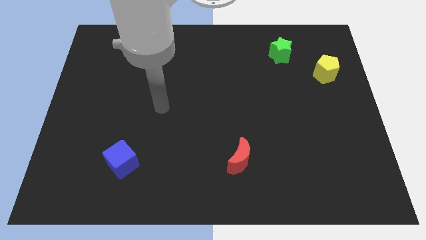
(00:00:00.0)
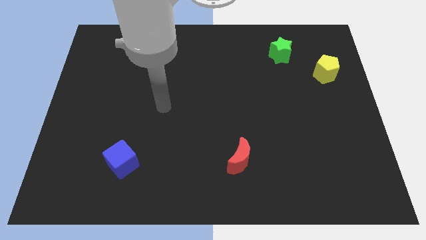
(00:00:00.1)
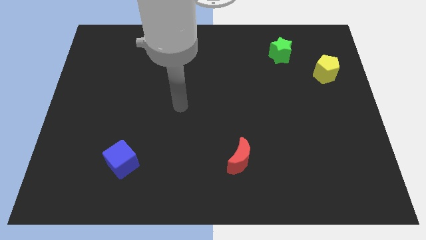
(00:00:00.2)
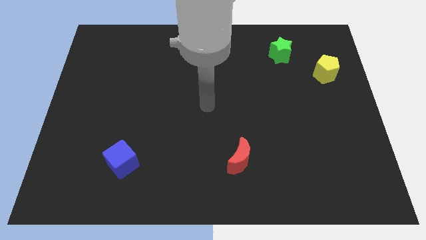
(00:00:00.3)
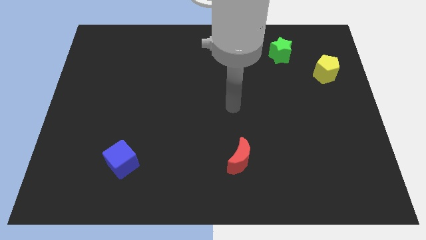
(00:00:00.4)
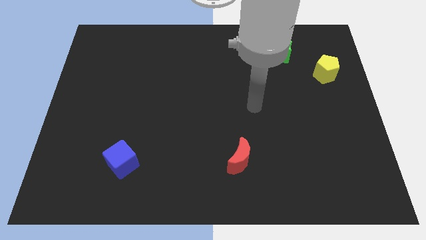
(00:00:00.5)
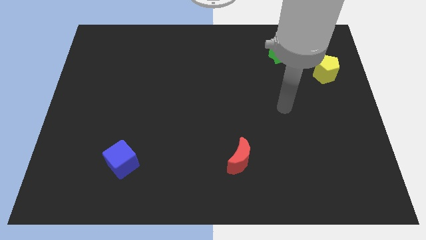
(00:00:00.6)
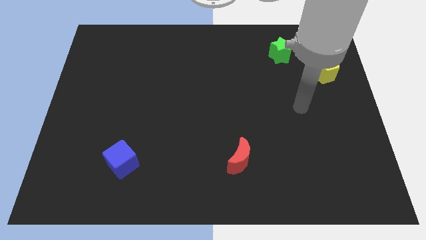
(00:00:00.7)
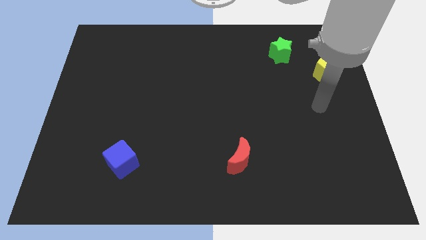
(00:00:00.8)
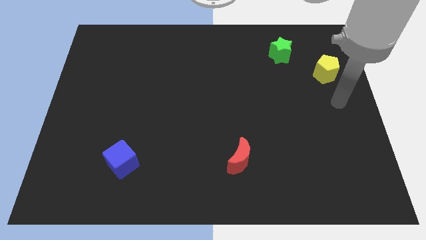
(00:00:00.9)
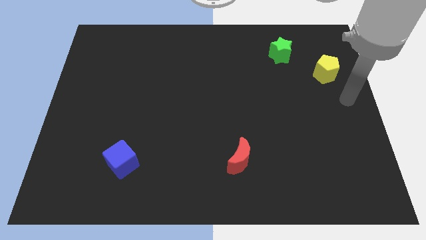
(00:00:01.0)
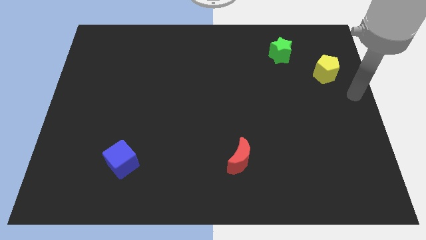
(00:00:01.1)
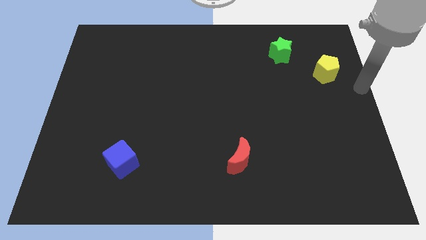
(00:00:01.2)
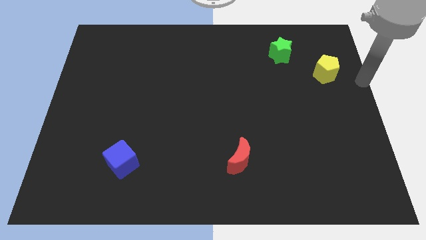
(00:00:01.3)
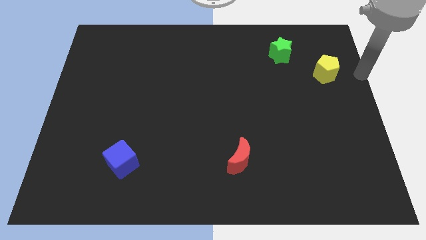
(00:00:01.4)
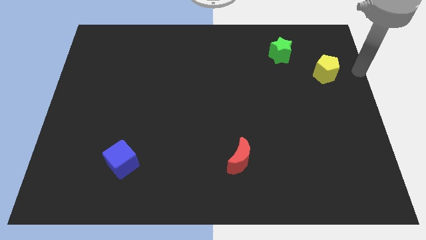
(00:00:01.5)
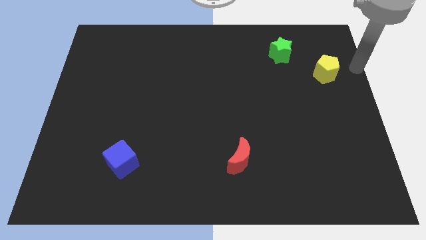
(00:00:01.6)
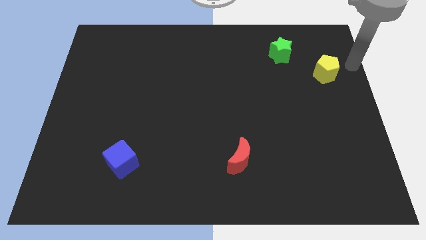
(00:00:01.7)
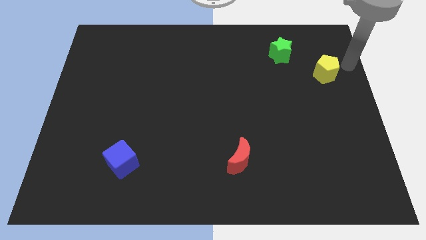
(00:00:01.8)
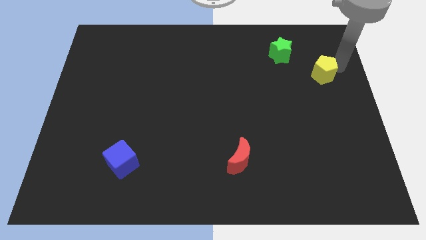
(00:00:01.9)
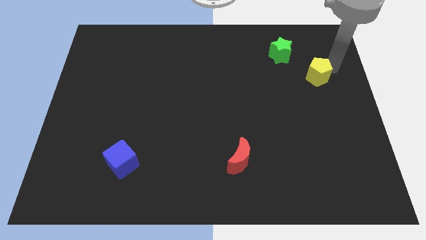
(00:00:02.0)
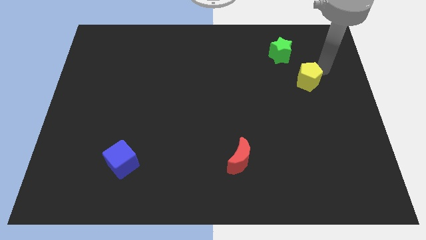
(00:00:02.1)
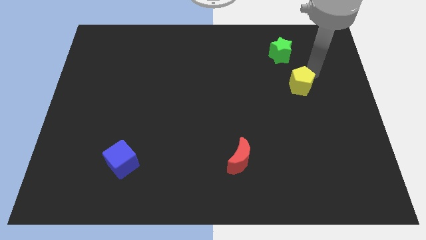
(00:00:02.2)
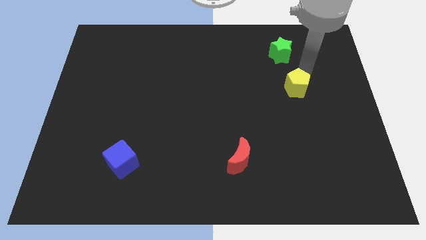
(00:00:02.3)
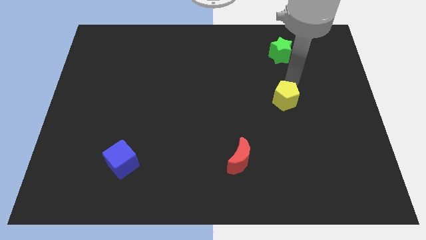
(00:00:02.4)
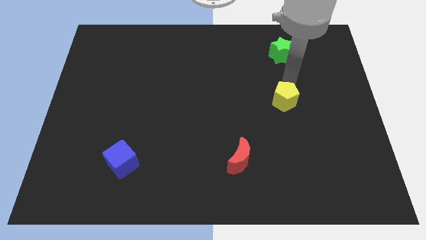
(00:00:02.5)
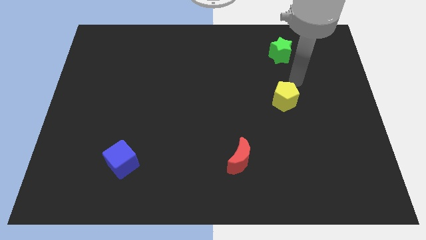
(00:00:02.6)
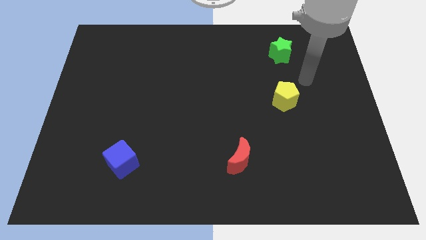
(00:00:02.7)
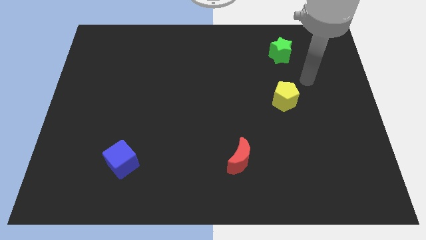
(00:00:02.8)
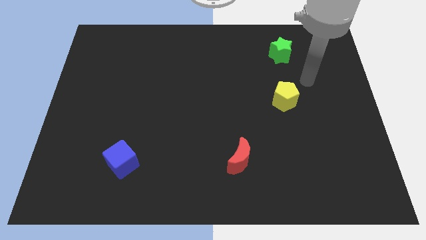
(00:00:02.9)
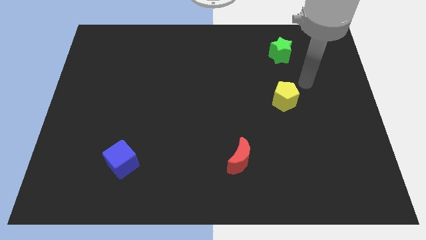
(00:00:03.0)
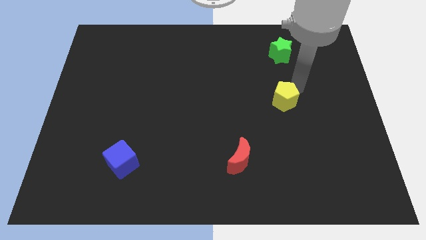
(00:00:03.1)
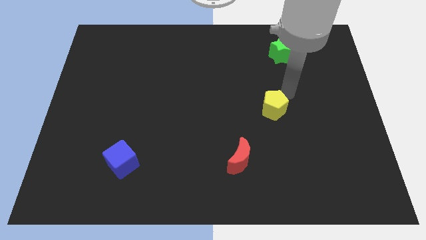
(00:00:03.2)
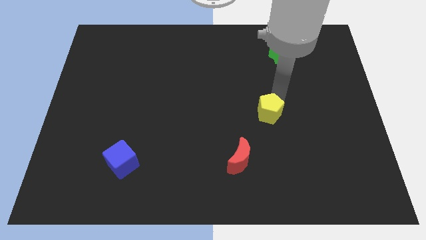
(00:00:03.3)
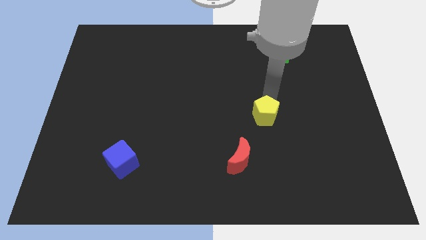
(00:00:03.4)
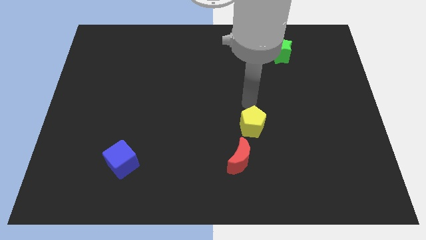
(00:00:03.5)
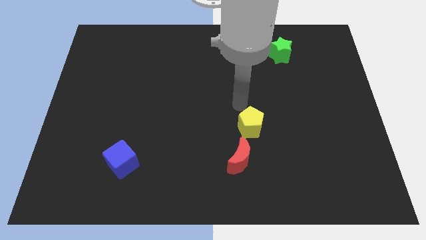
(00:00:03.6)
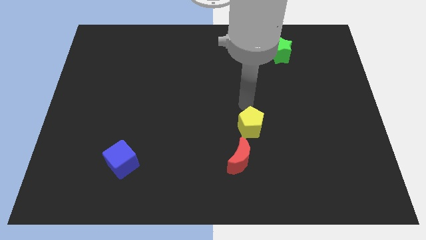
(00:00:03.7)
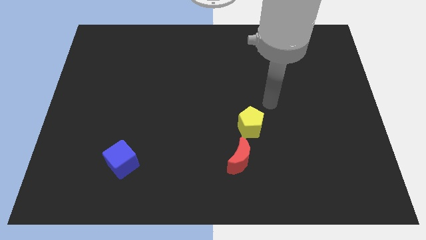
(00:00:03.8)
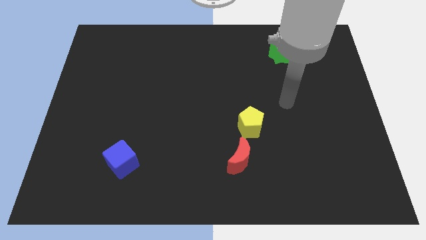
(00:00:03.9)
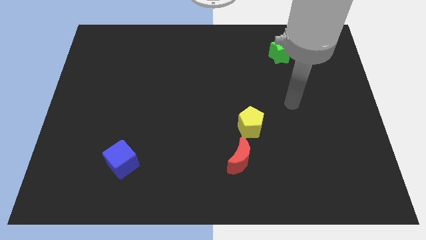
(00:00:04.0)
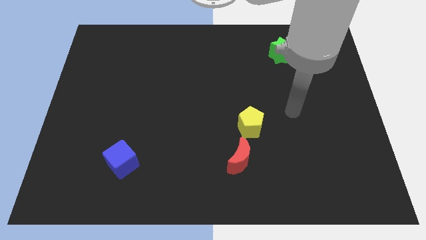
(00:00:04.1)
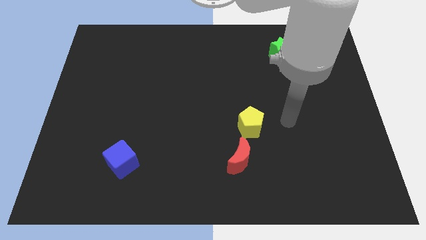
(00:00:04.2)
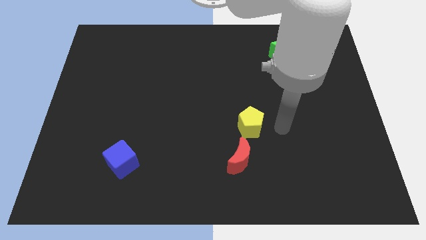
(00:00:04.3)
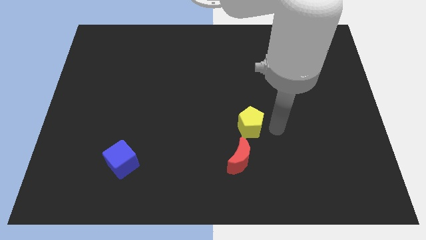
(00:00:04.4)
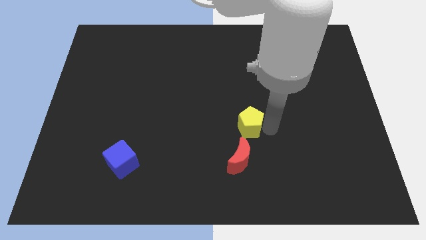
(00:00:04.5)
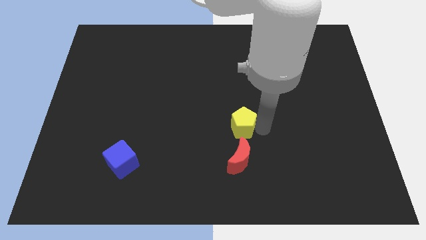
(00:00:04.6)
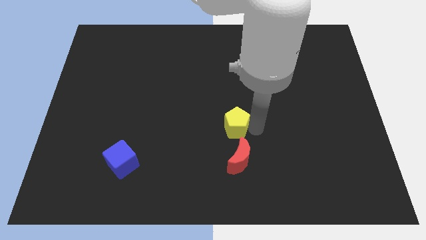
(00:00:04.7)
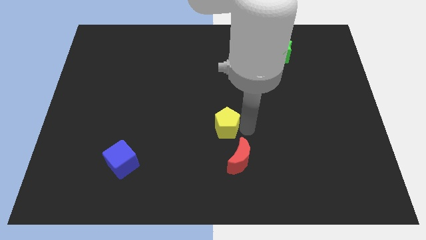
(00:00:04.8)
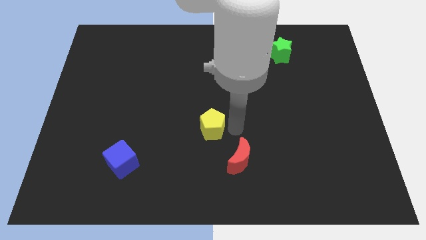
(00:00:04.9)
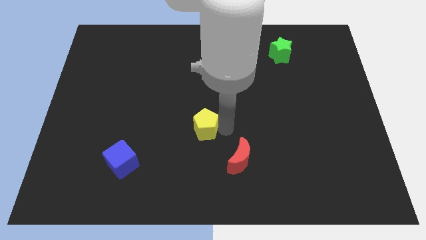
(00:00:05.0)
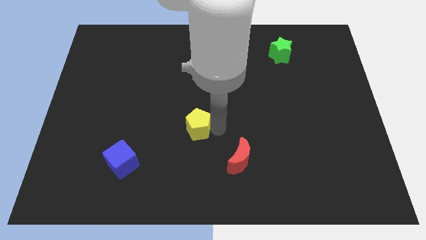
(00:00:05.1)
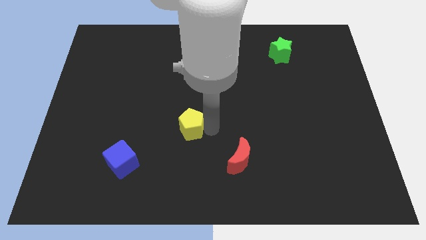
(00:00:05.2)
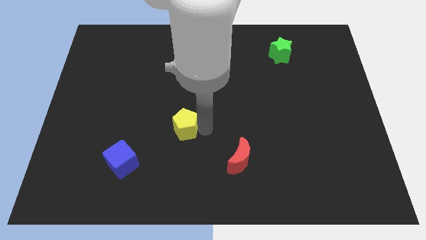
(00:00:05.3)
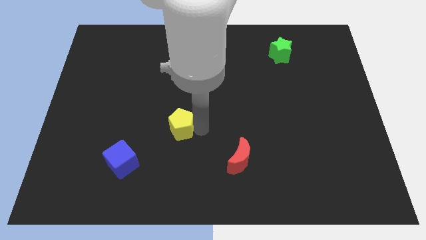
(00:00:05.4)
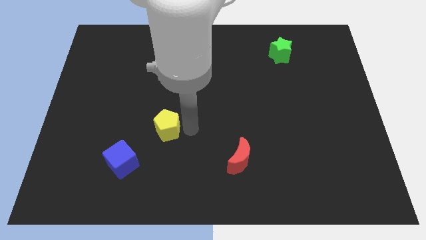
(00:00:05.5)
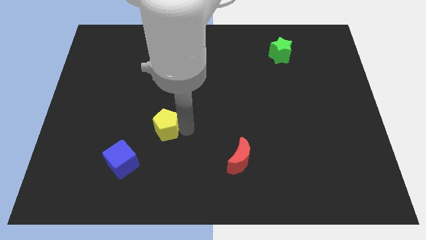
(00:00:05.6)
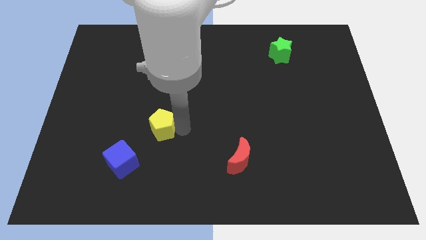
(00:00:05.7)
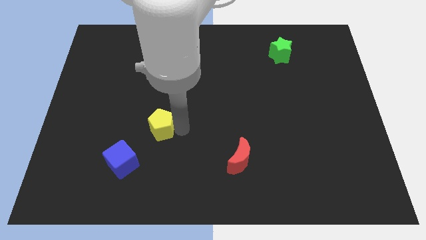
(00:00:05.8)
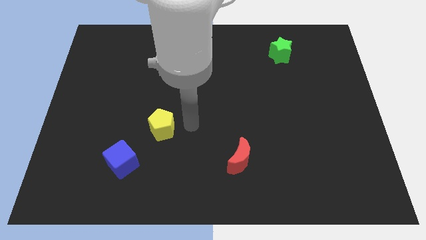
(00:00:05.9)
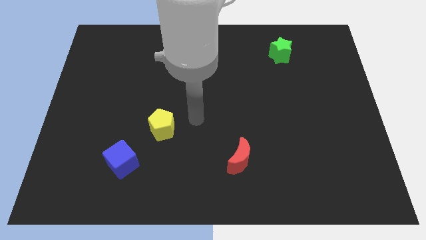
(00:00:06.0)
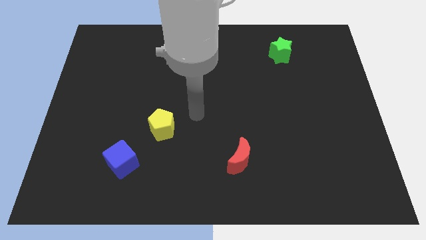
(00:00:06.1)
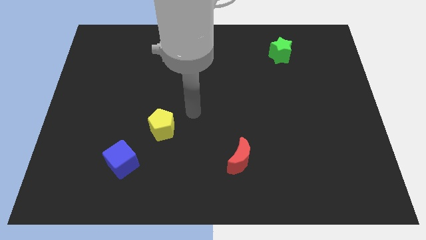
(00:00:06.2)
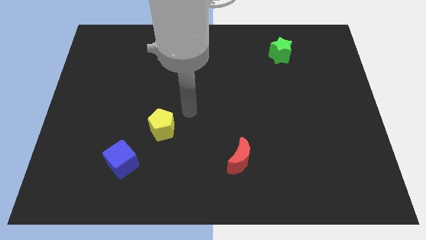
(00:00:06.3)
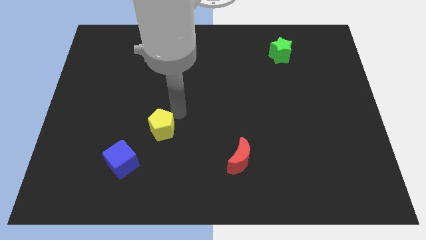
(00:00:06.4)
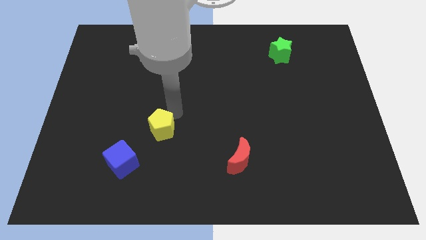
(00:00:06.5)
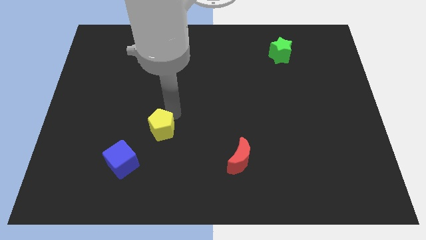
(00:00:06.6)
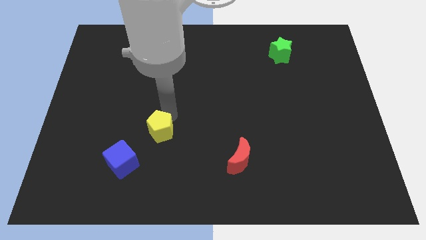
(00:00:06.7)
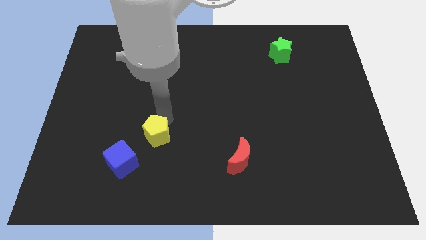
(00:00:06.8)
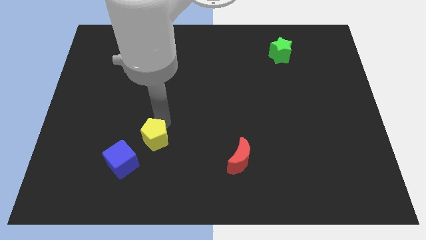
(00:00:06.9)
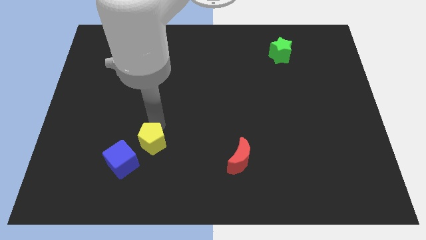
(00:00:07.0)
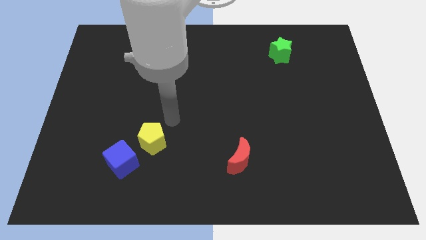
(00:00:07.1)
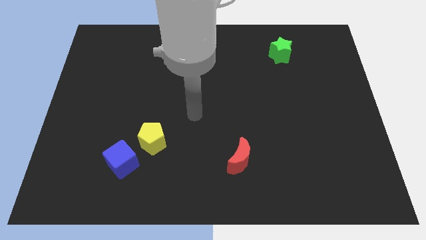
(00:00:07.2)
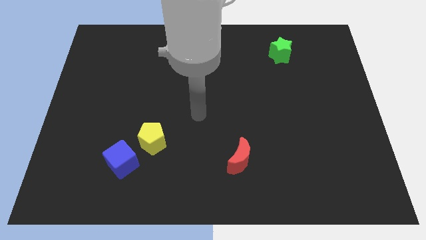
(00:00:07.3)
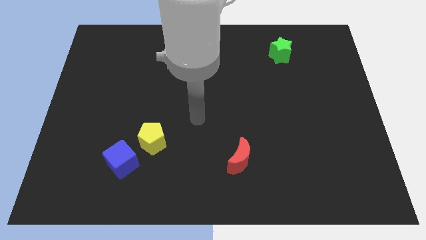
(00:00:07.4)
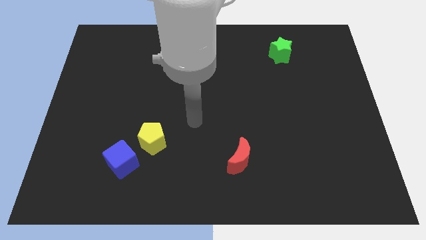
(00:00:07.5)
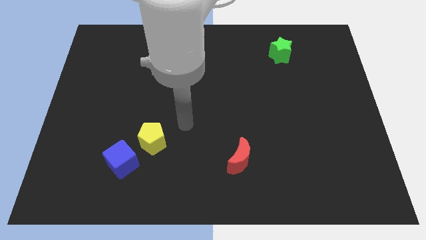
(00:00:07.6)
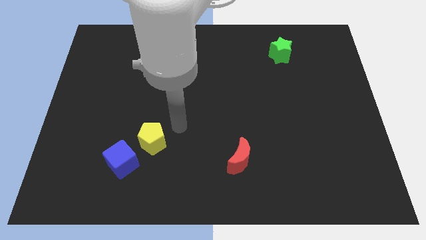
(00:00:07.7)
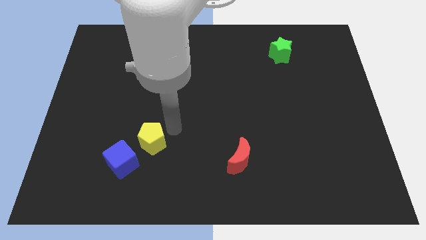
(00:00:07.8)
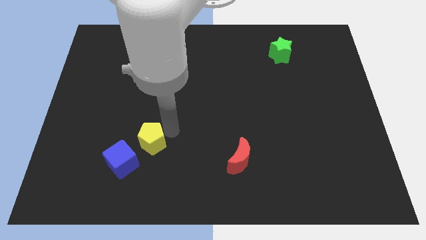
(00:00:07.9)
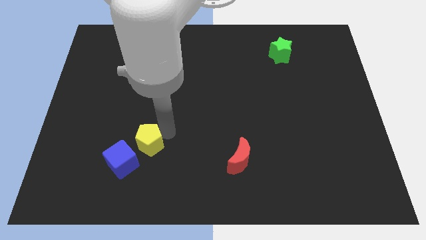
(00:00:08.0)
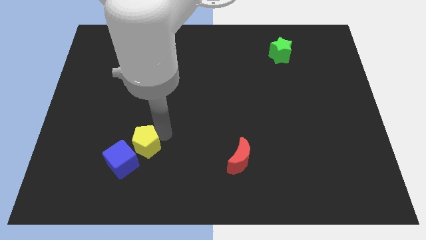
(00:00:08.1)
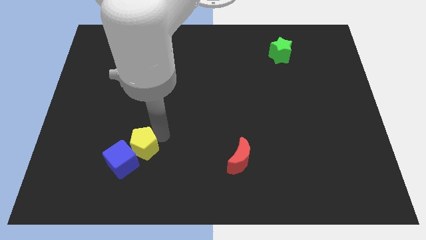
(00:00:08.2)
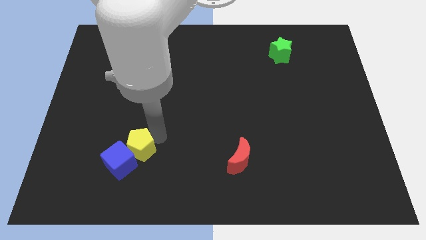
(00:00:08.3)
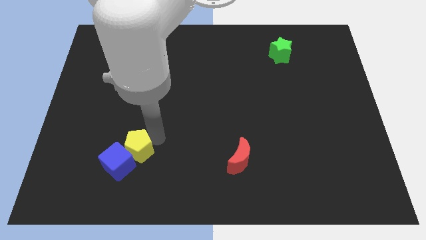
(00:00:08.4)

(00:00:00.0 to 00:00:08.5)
slide the yellow block close to the blue cube

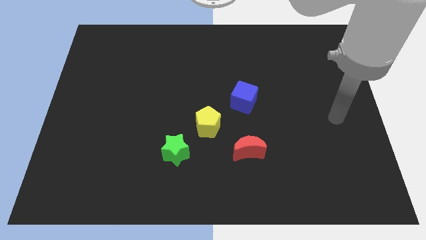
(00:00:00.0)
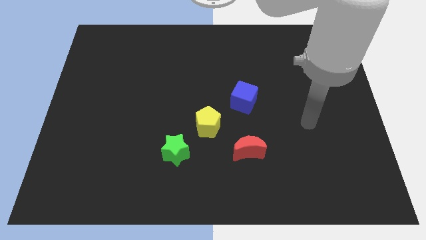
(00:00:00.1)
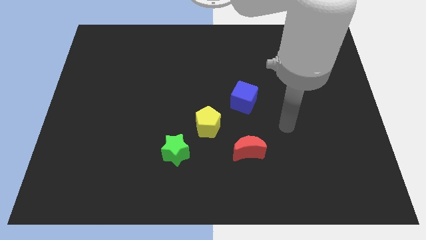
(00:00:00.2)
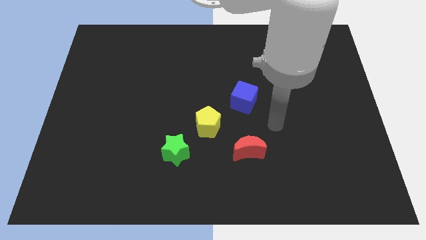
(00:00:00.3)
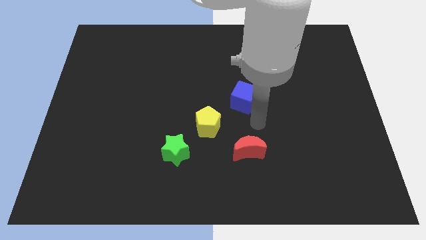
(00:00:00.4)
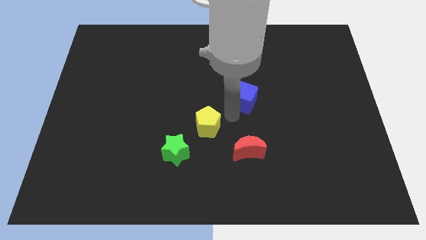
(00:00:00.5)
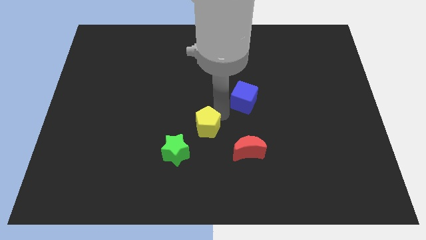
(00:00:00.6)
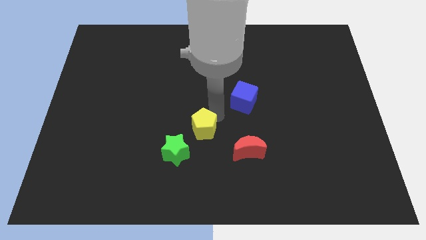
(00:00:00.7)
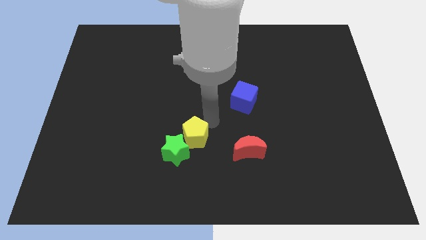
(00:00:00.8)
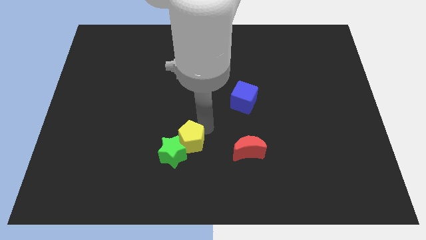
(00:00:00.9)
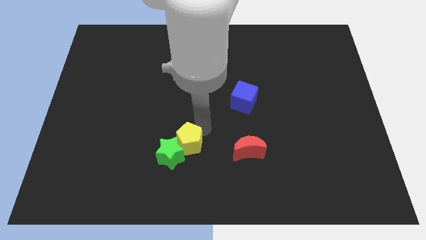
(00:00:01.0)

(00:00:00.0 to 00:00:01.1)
put the pentagon next to the green block
